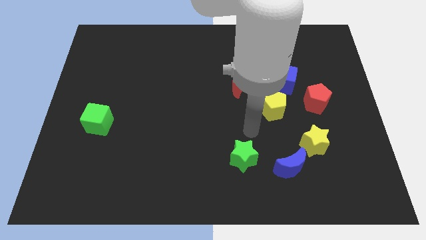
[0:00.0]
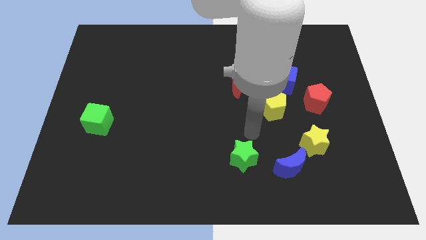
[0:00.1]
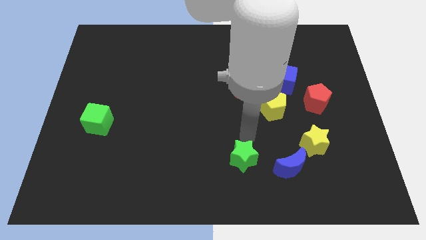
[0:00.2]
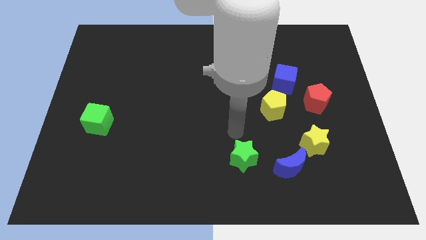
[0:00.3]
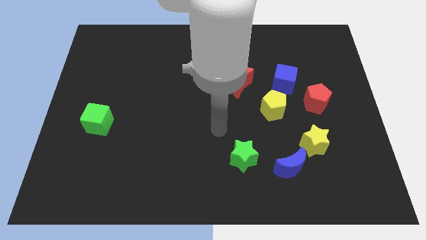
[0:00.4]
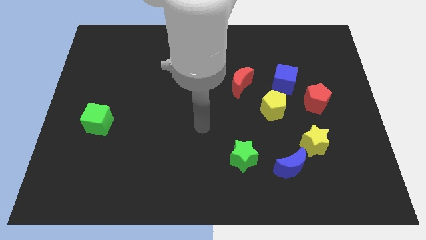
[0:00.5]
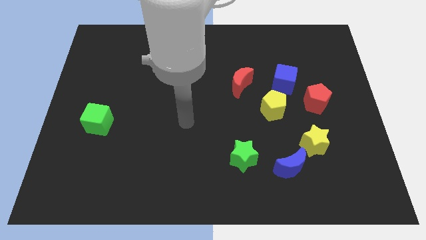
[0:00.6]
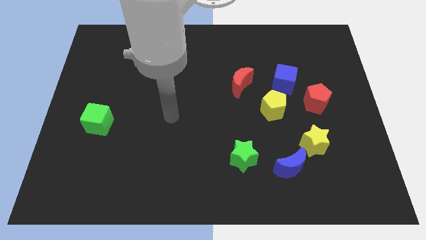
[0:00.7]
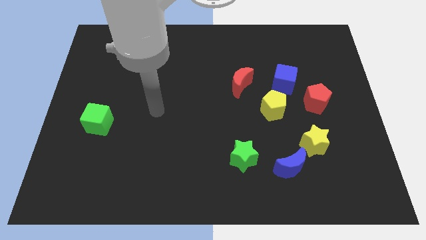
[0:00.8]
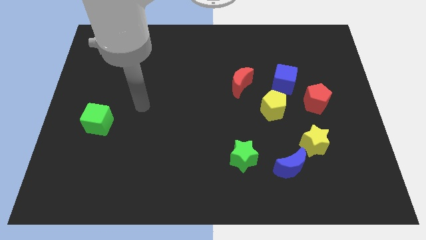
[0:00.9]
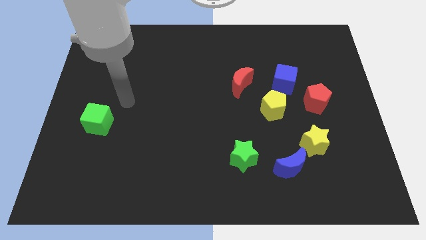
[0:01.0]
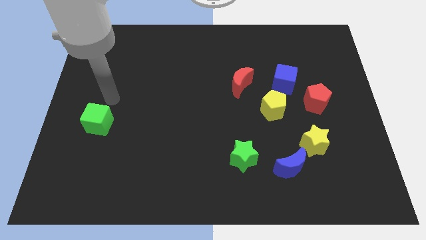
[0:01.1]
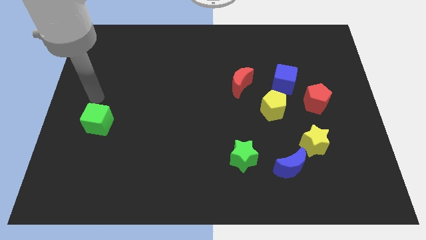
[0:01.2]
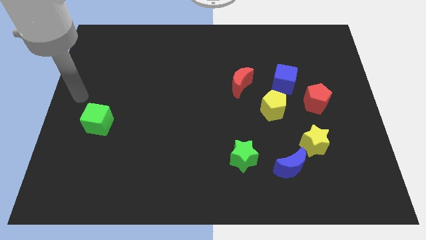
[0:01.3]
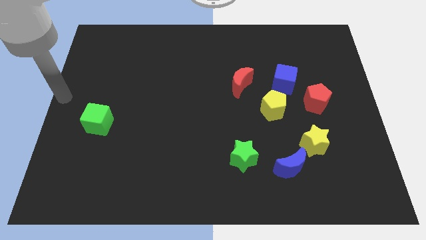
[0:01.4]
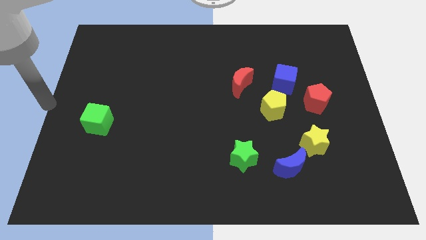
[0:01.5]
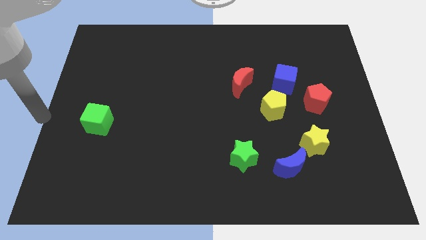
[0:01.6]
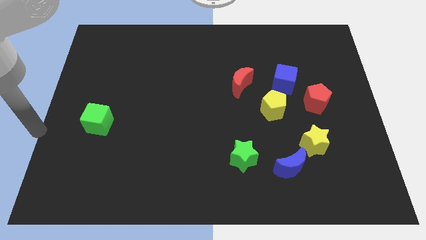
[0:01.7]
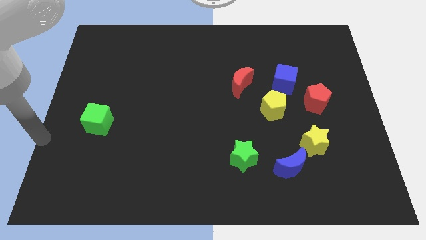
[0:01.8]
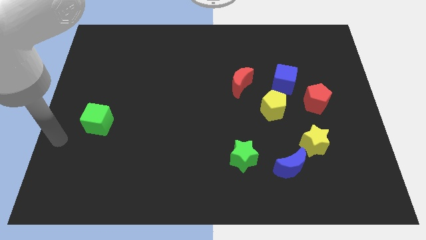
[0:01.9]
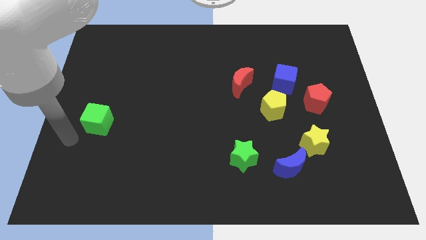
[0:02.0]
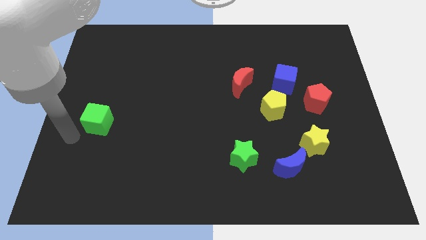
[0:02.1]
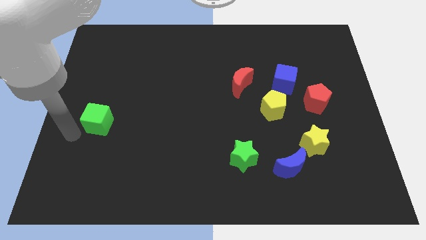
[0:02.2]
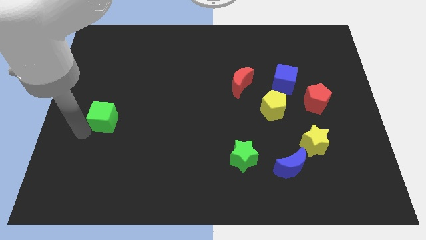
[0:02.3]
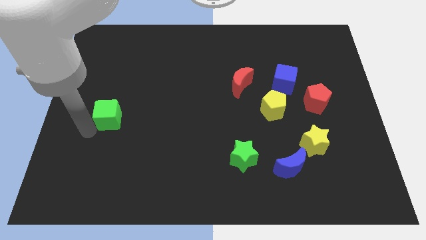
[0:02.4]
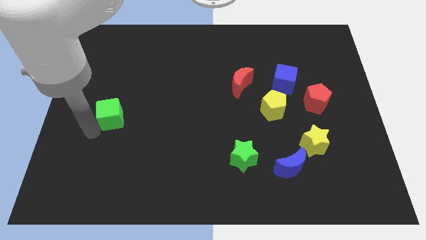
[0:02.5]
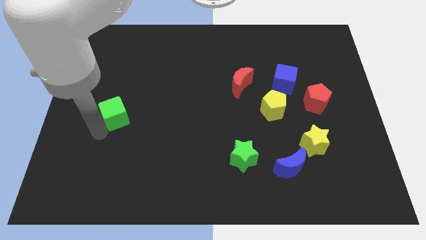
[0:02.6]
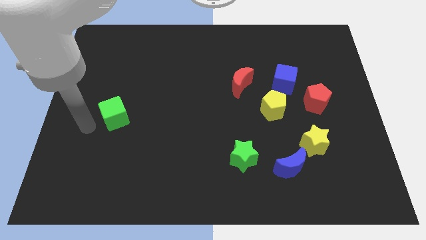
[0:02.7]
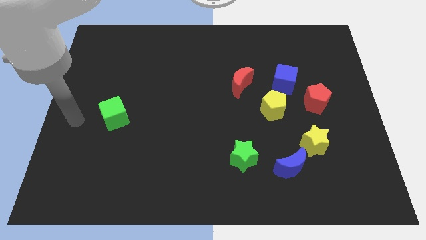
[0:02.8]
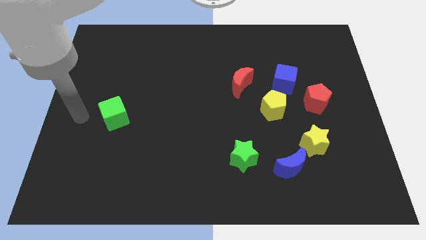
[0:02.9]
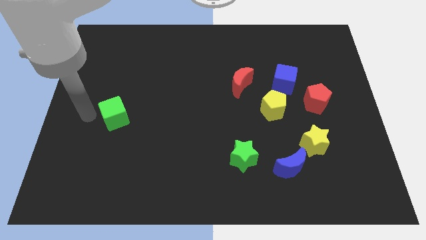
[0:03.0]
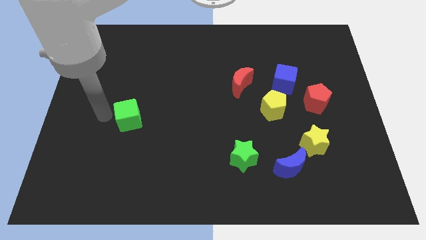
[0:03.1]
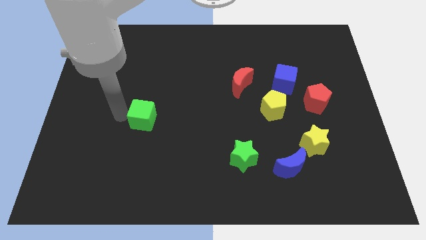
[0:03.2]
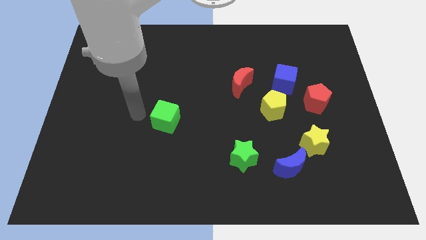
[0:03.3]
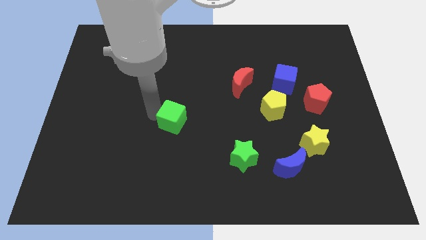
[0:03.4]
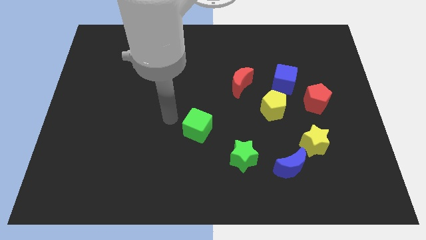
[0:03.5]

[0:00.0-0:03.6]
push the green cube towards the right side of the board

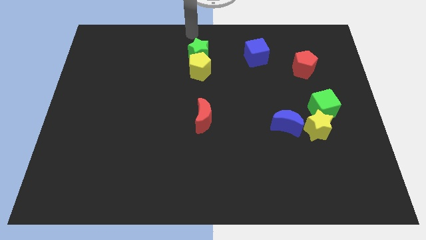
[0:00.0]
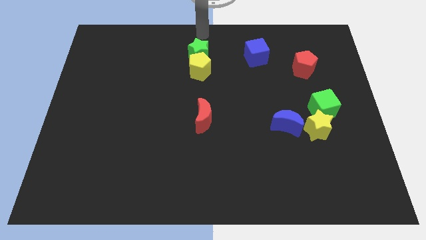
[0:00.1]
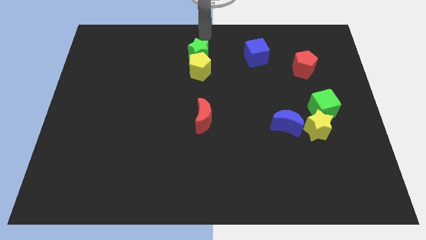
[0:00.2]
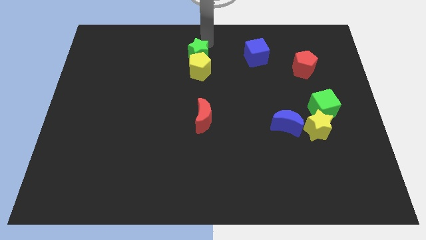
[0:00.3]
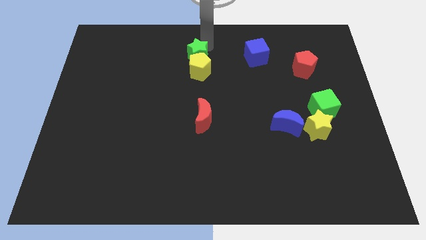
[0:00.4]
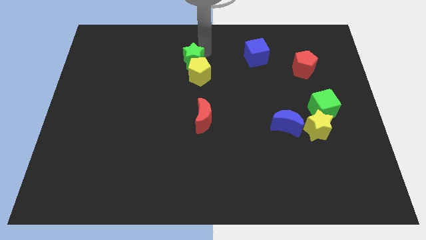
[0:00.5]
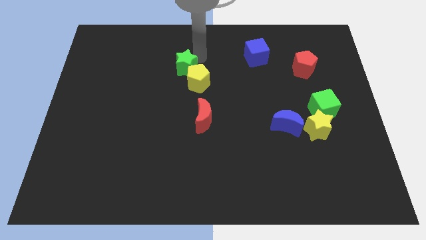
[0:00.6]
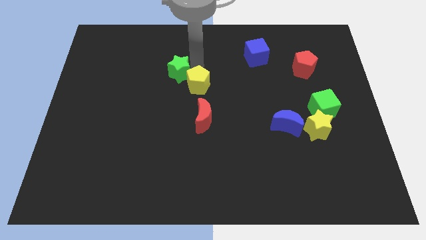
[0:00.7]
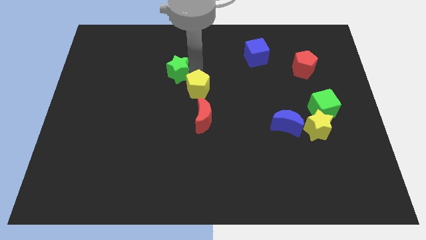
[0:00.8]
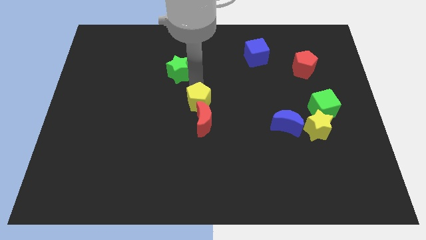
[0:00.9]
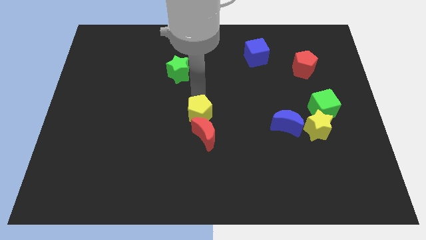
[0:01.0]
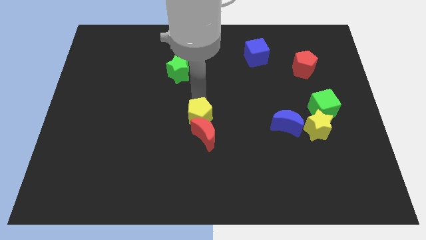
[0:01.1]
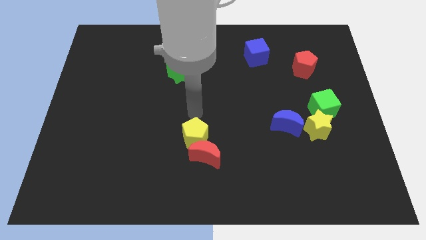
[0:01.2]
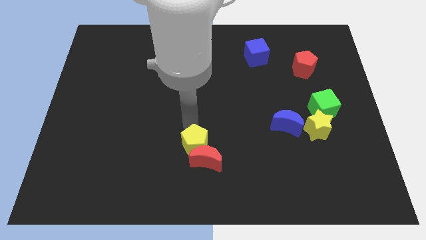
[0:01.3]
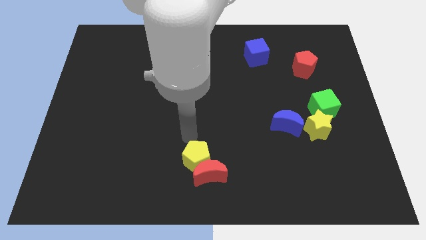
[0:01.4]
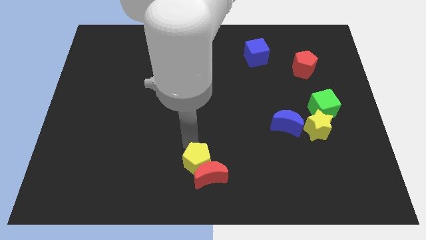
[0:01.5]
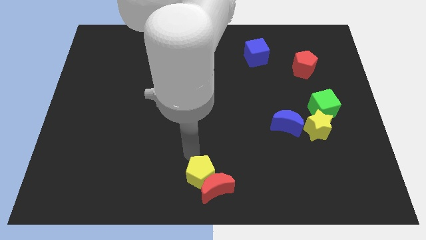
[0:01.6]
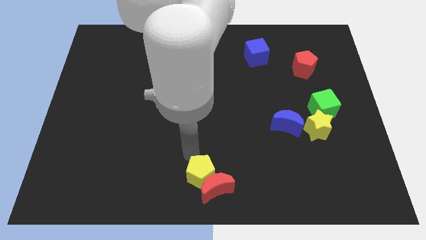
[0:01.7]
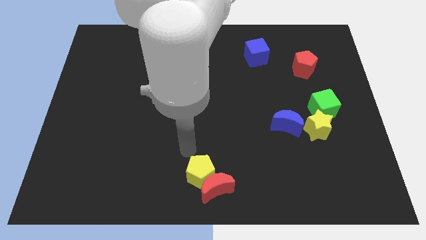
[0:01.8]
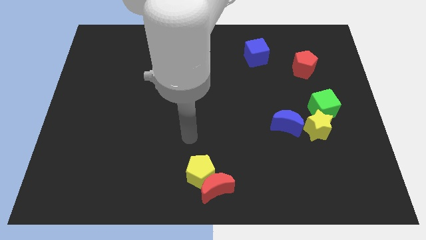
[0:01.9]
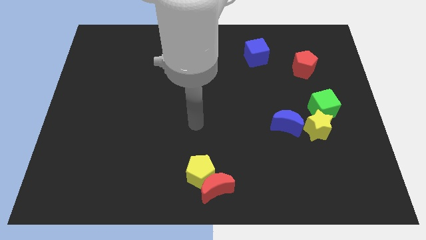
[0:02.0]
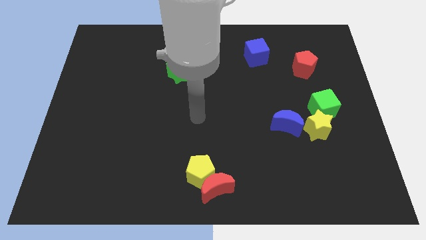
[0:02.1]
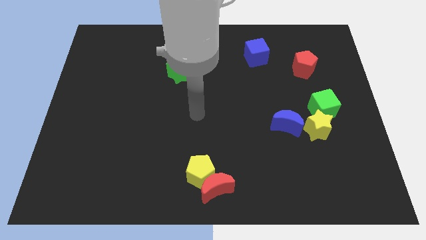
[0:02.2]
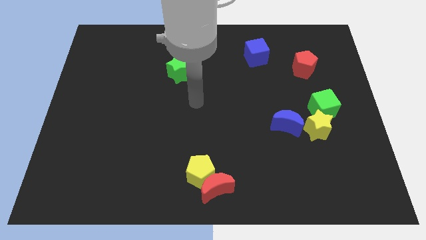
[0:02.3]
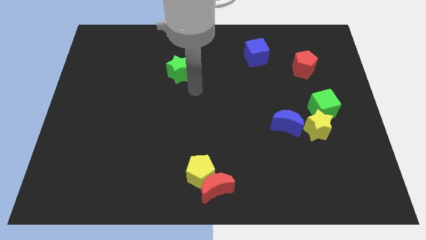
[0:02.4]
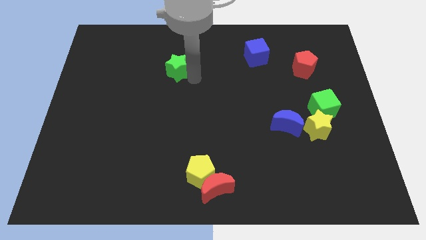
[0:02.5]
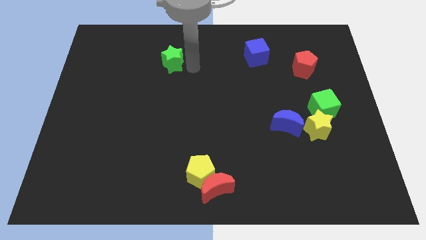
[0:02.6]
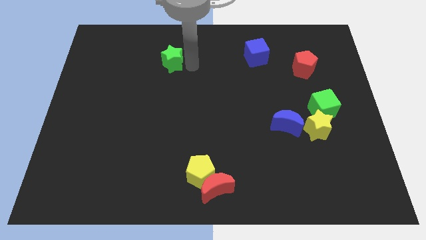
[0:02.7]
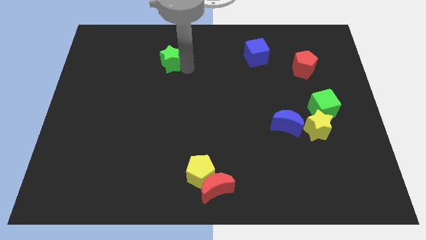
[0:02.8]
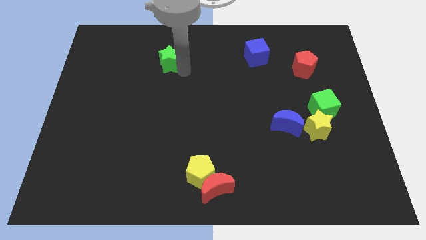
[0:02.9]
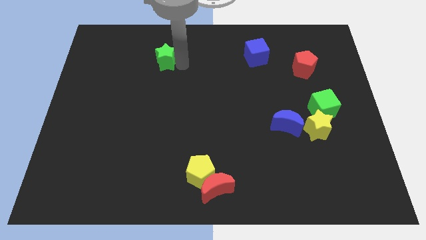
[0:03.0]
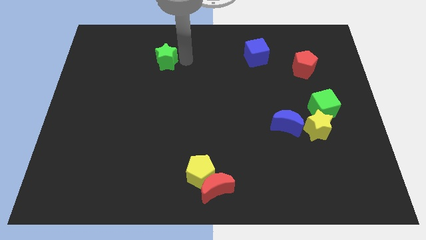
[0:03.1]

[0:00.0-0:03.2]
separate yellow pentagon from green star

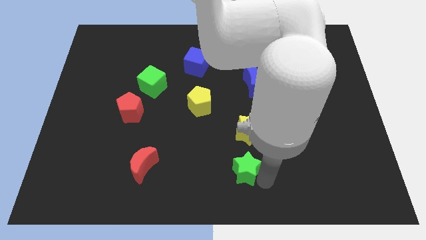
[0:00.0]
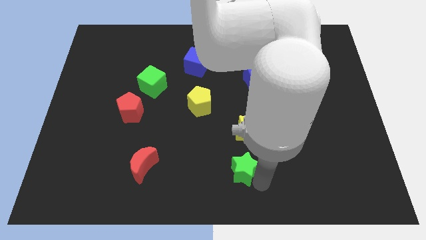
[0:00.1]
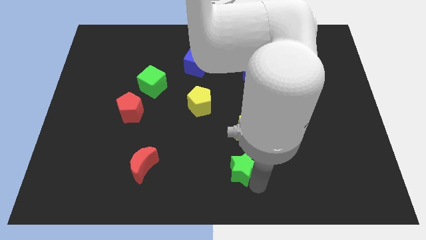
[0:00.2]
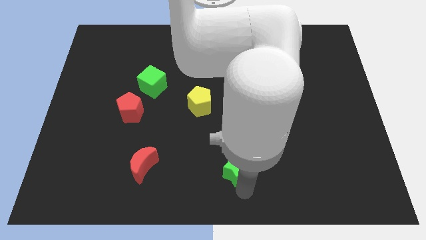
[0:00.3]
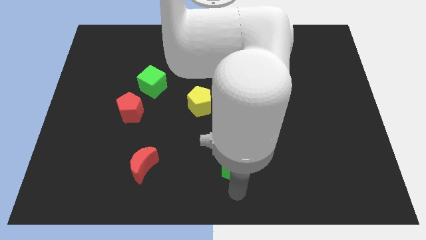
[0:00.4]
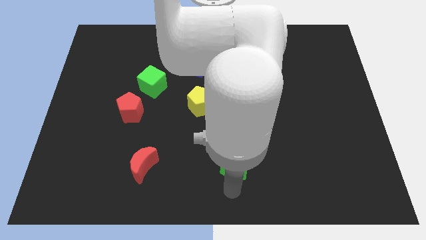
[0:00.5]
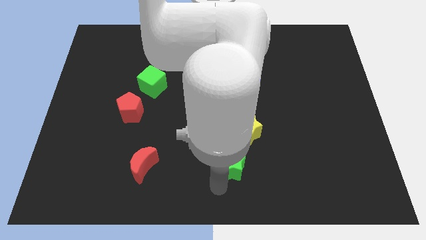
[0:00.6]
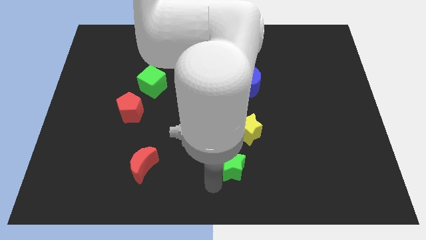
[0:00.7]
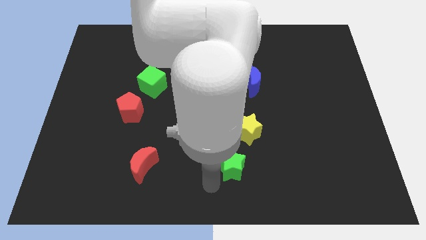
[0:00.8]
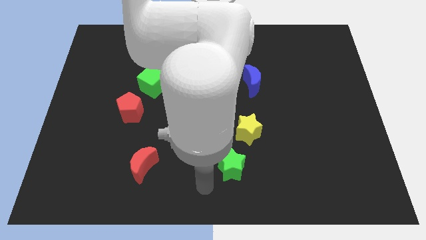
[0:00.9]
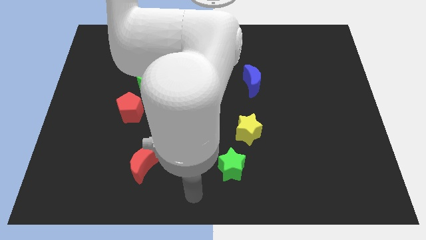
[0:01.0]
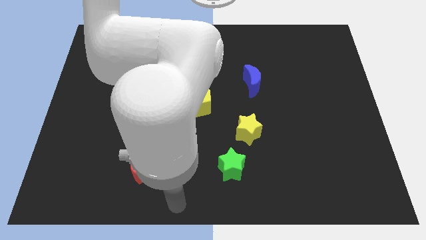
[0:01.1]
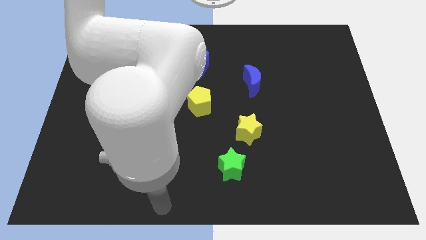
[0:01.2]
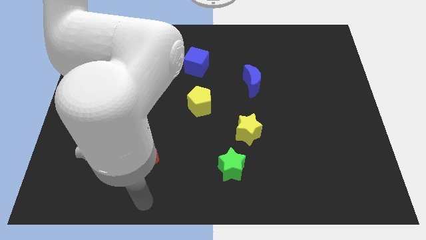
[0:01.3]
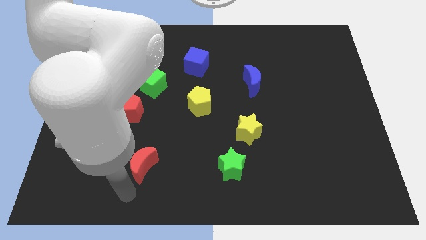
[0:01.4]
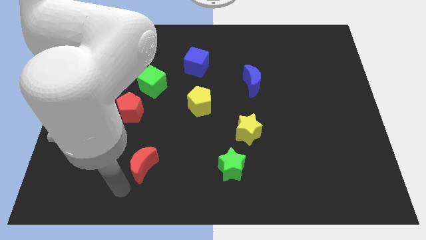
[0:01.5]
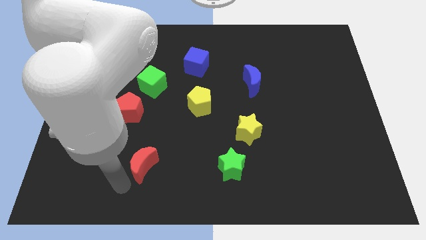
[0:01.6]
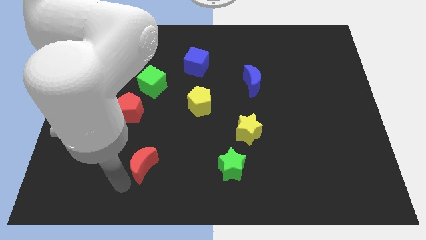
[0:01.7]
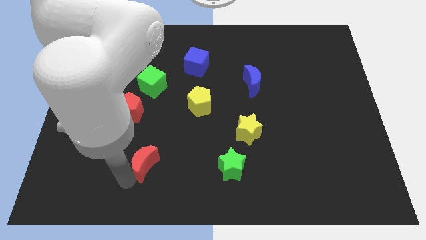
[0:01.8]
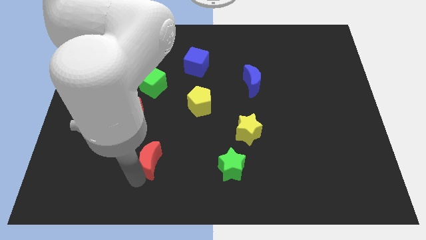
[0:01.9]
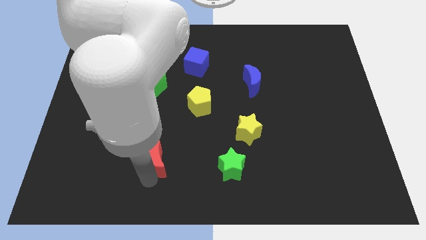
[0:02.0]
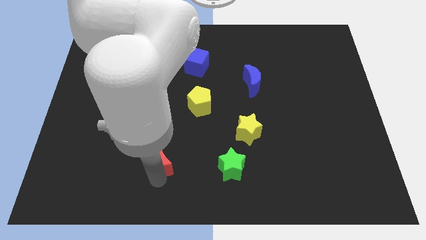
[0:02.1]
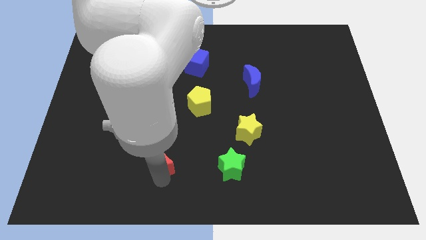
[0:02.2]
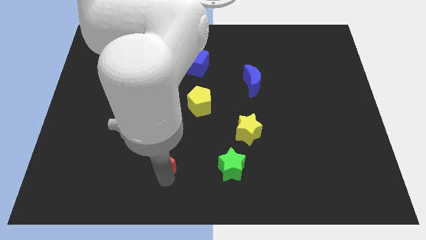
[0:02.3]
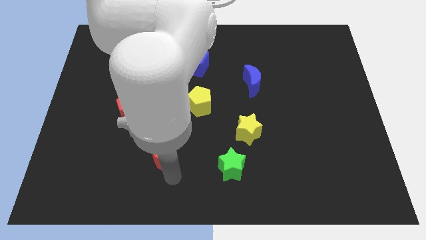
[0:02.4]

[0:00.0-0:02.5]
slightly adjust the red moon towards up
